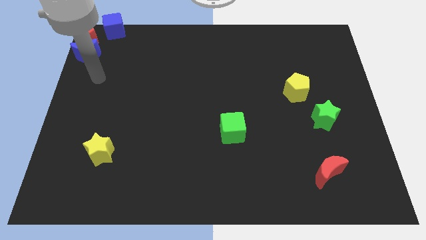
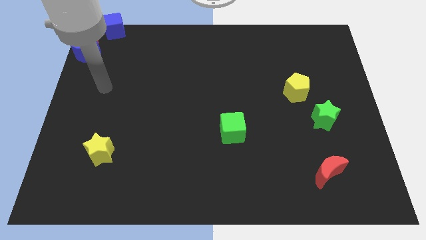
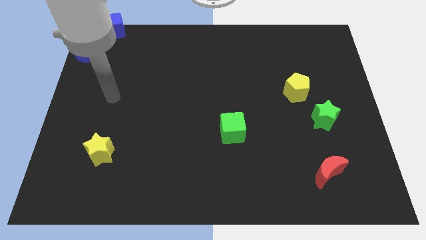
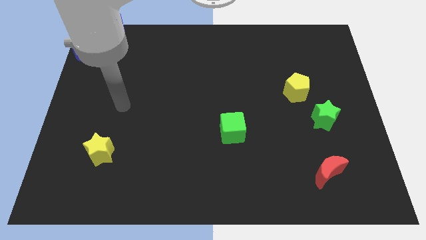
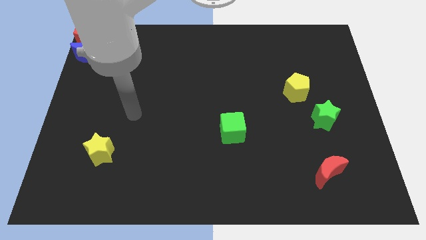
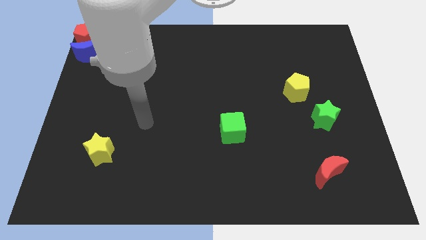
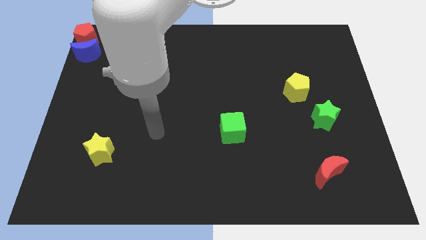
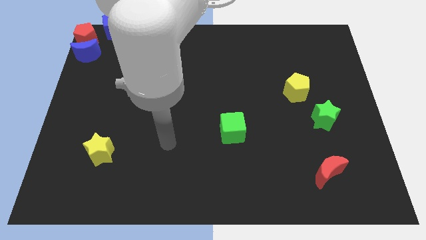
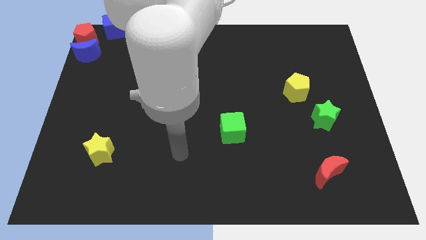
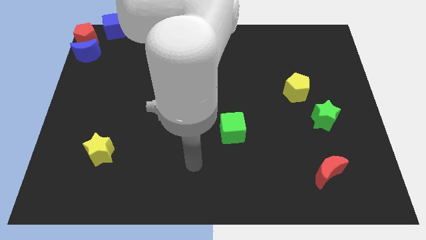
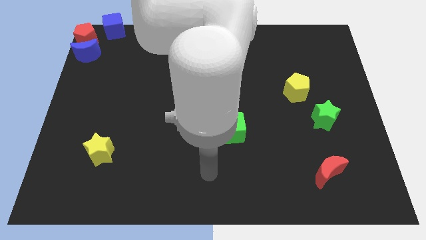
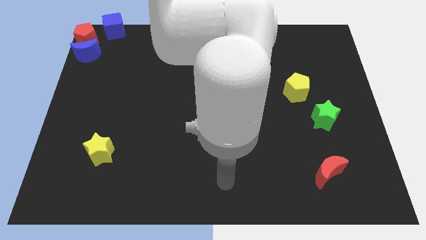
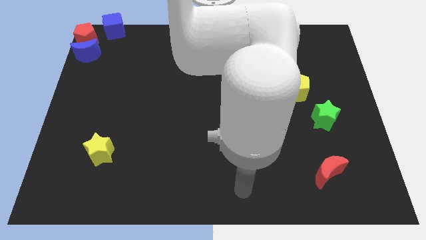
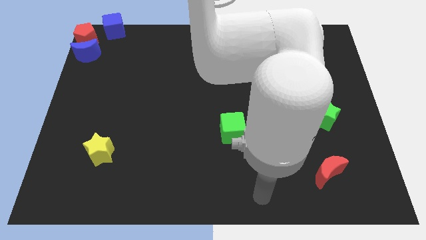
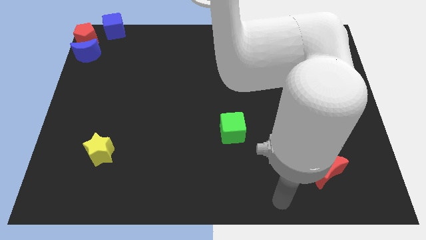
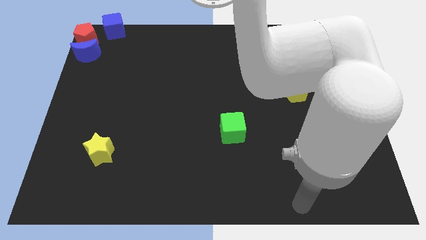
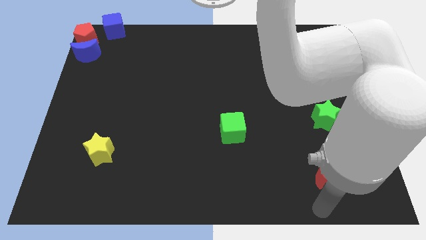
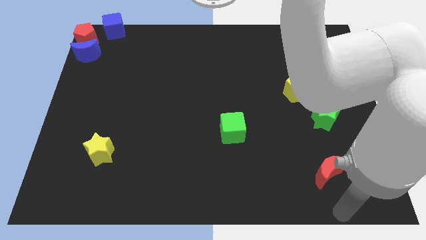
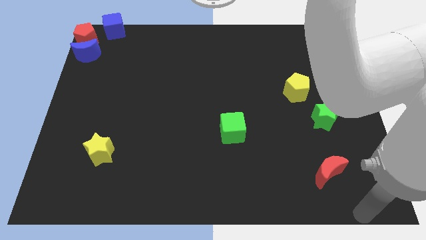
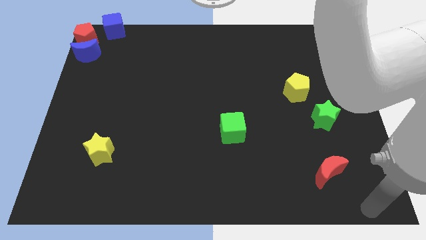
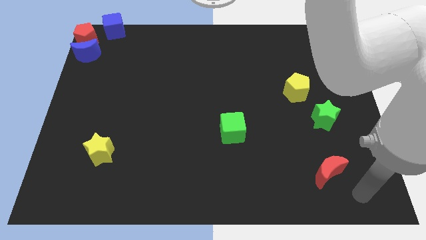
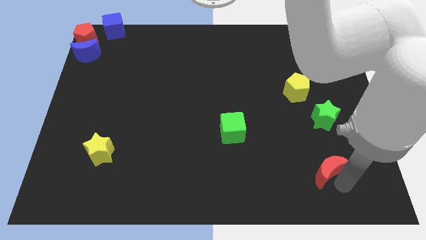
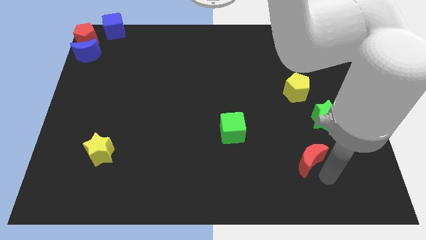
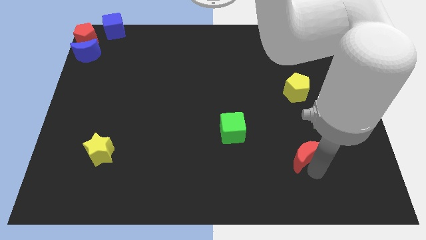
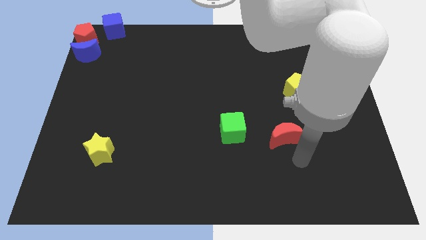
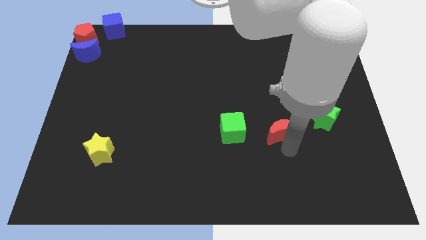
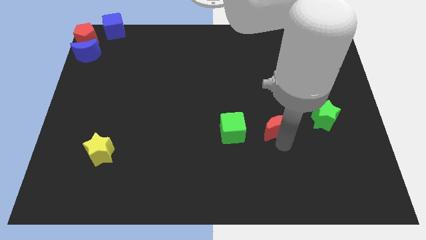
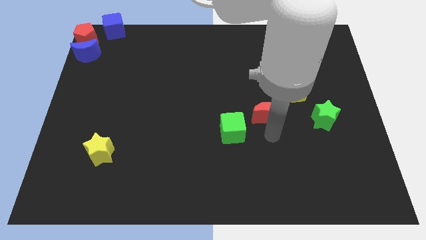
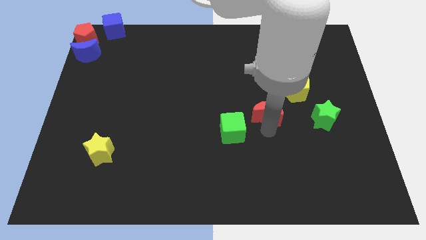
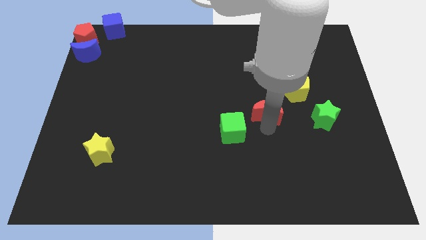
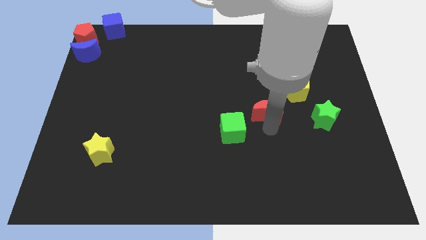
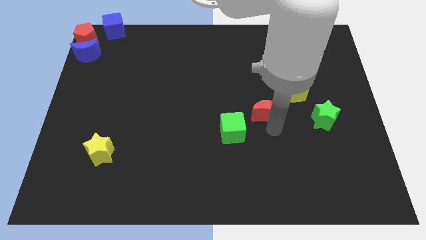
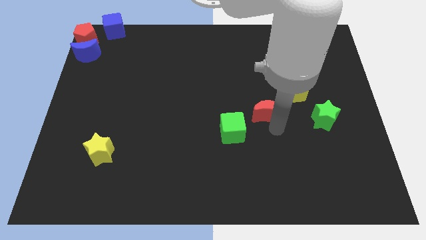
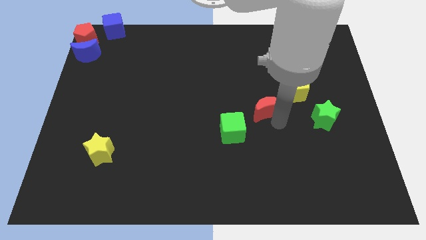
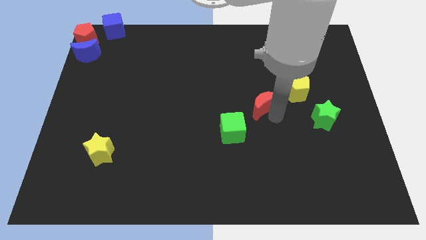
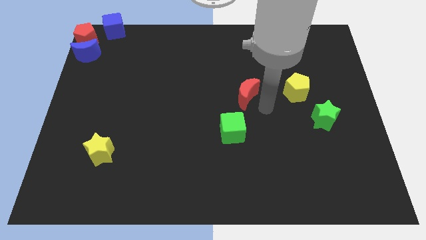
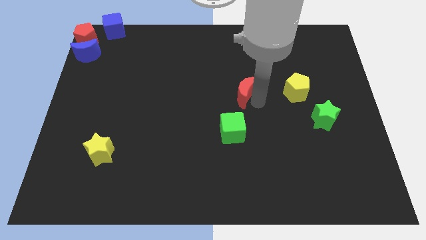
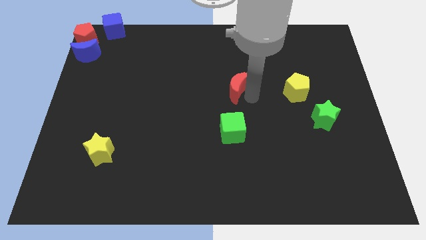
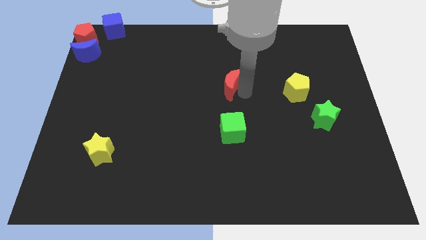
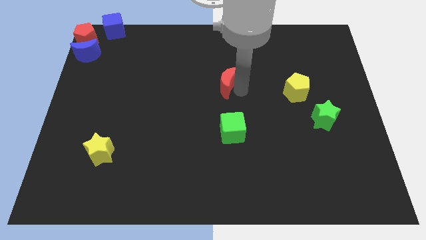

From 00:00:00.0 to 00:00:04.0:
slide the red moon to the top side of the green cube

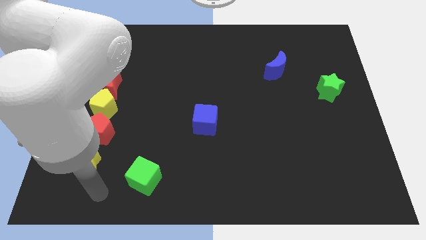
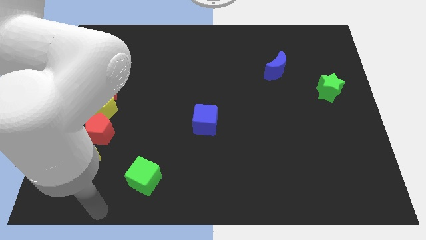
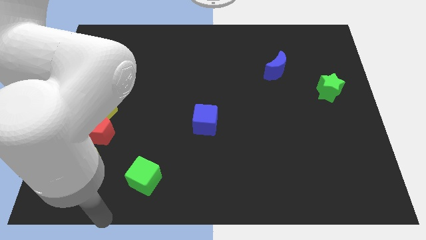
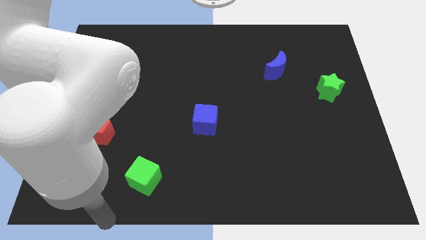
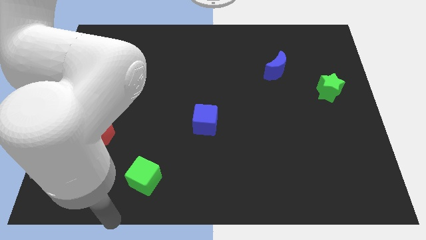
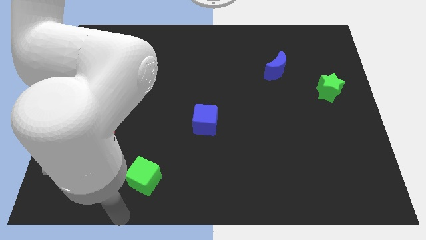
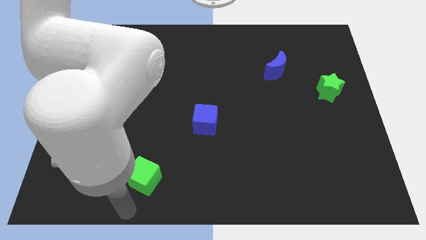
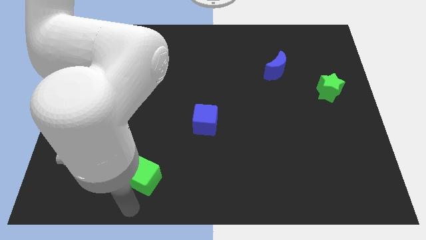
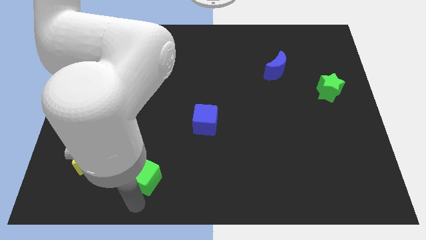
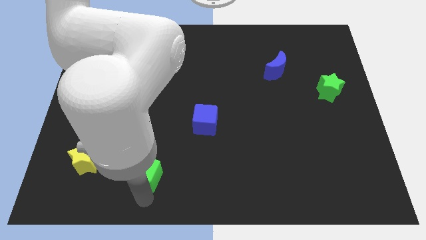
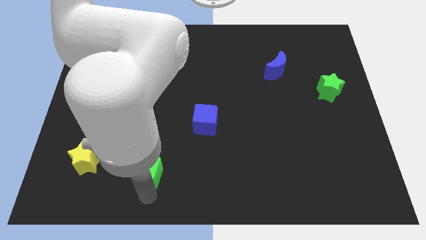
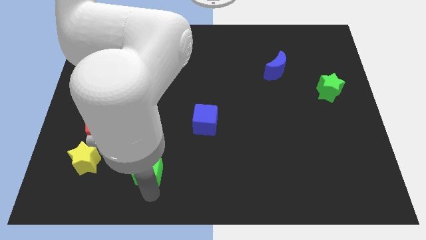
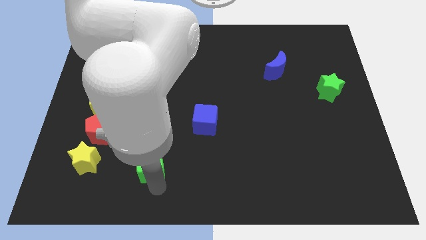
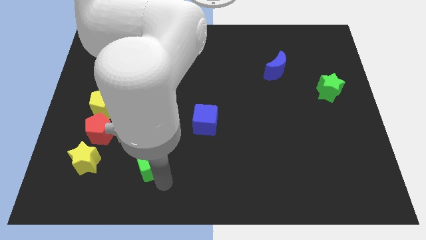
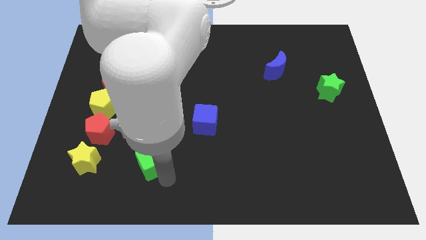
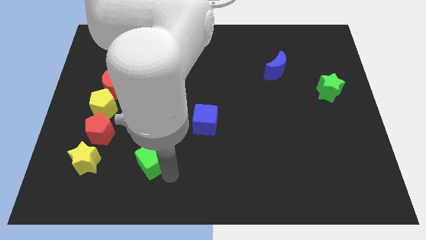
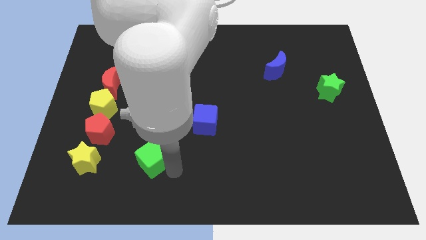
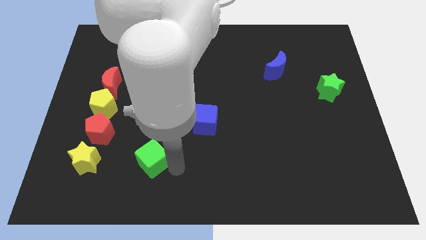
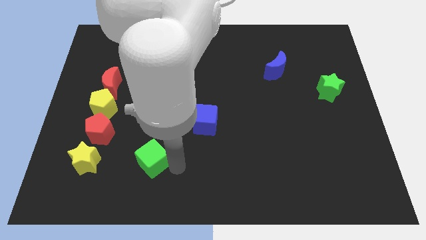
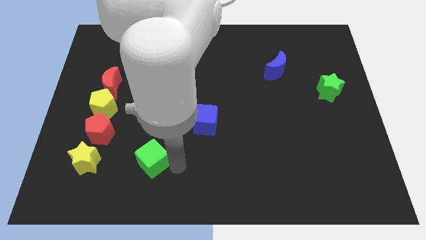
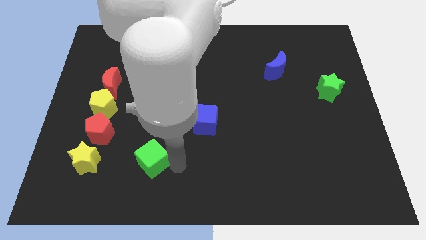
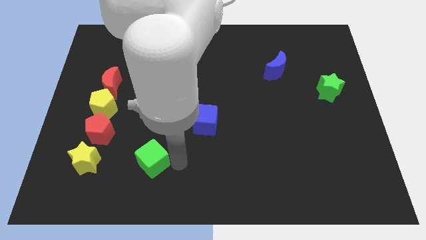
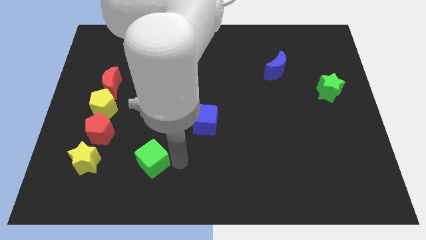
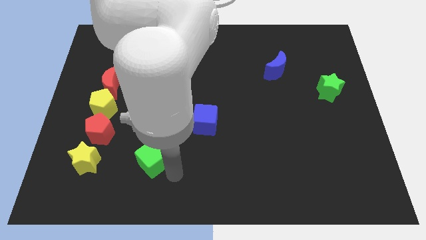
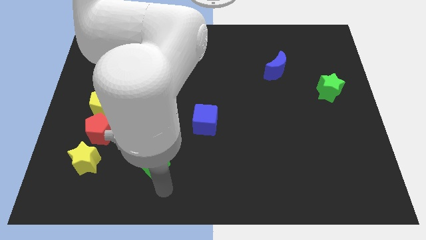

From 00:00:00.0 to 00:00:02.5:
move the green cube to the right of the yellow star

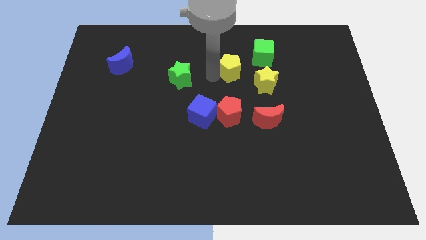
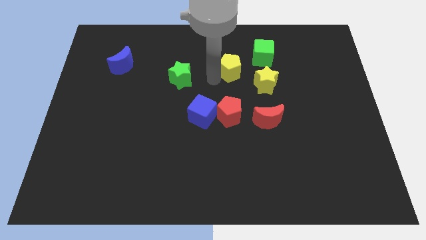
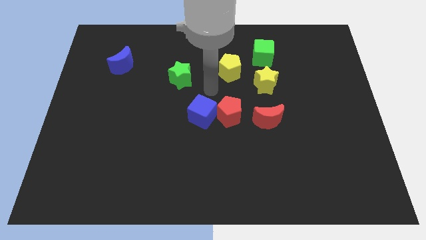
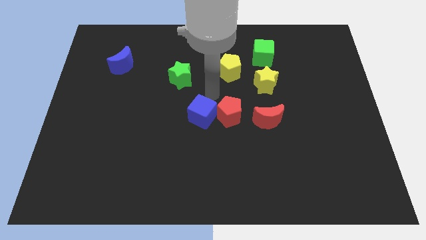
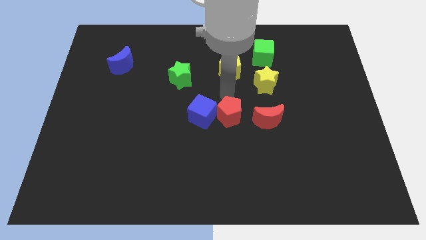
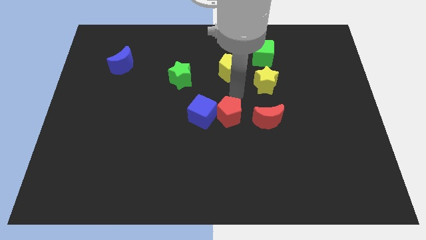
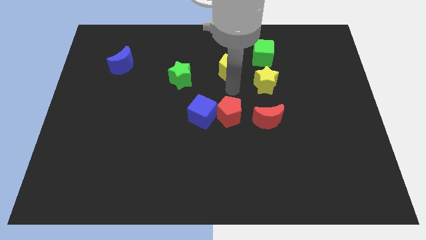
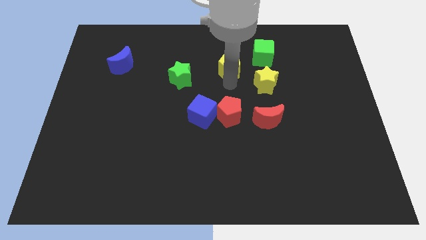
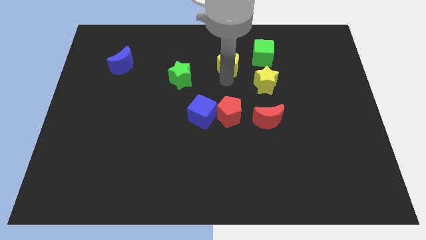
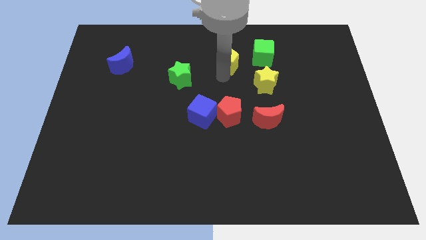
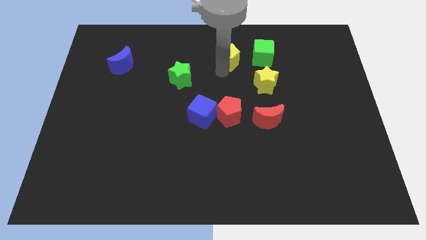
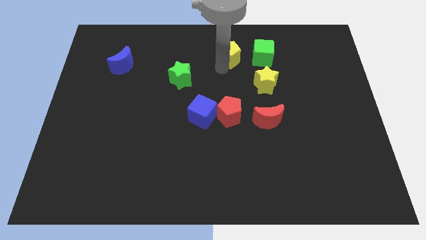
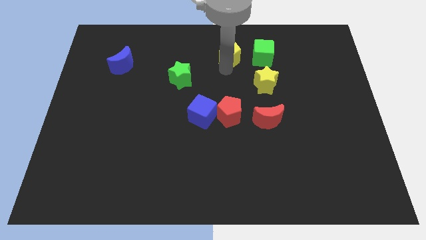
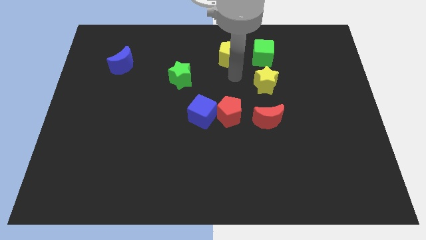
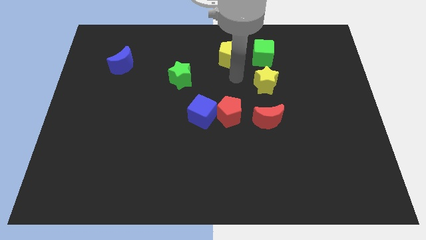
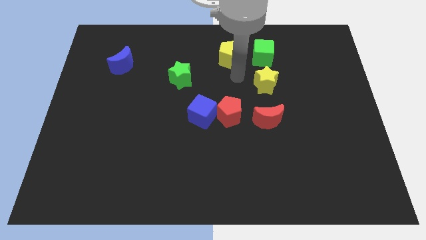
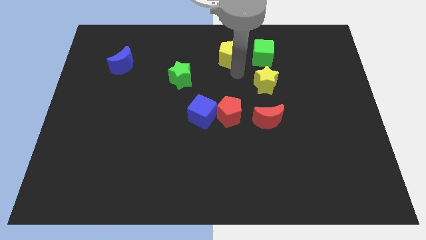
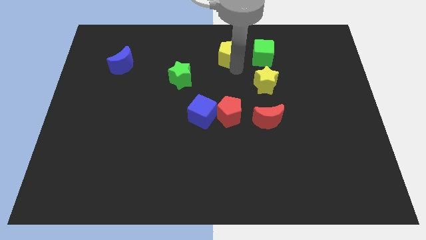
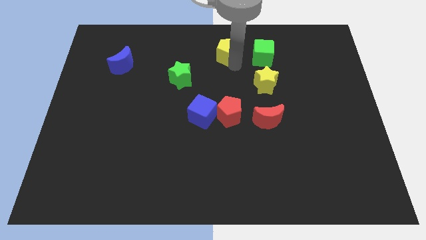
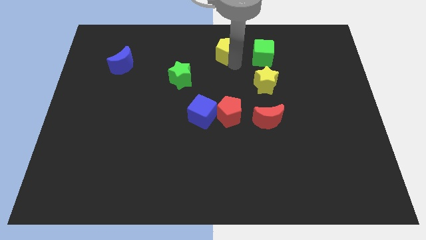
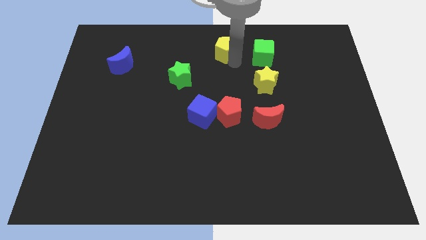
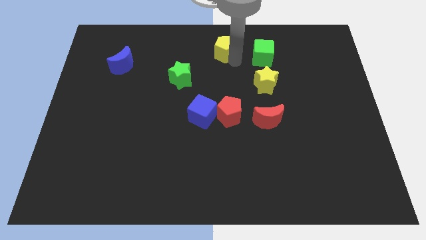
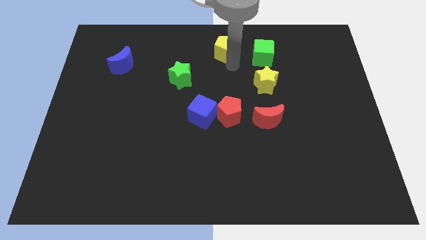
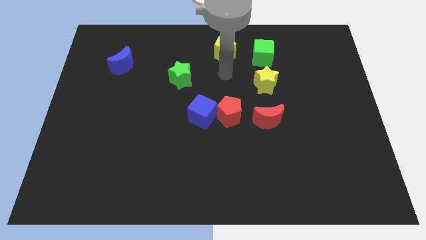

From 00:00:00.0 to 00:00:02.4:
push the yellow pentagon to the left side of the green cube

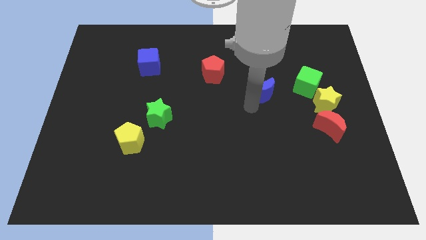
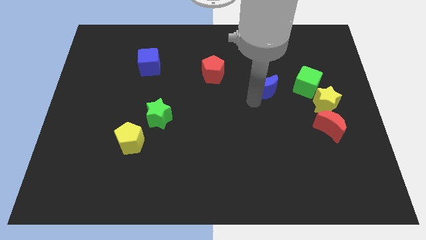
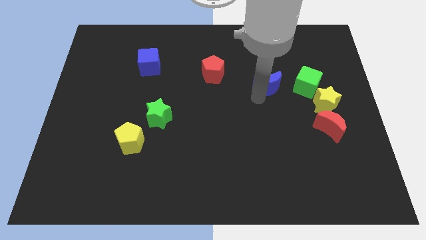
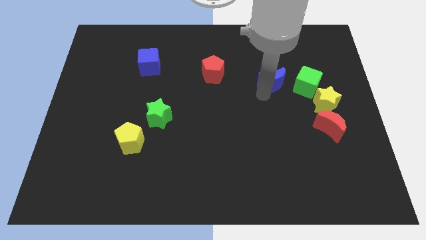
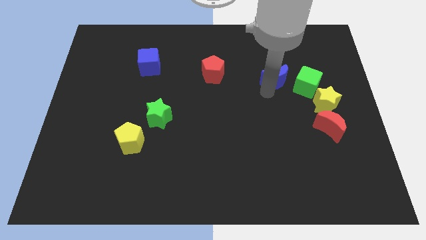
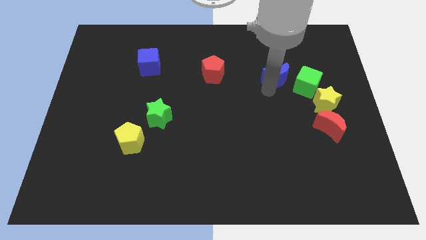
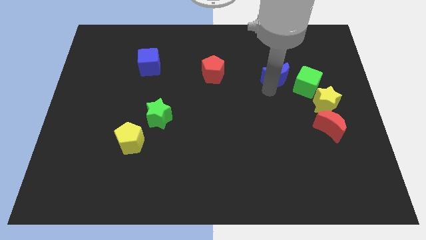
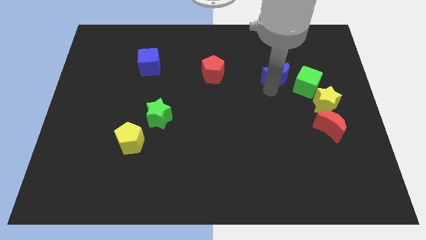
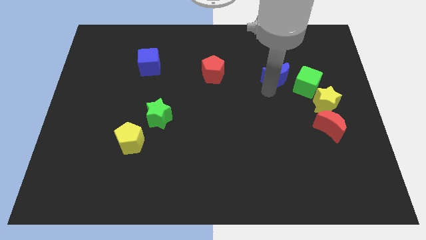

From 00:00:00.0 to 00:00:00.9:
push the blue crescent to the left of the green cube
